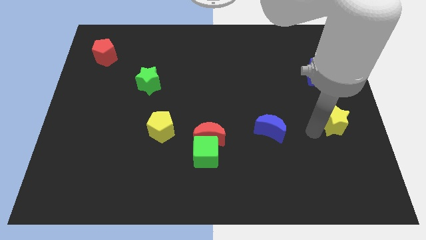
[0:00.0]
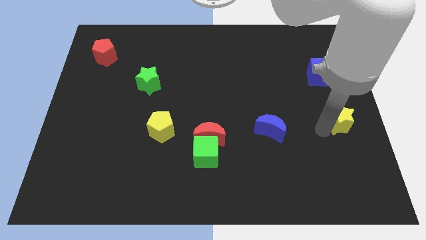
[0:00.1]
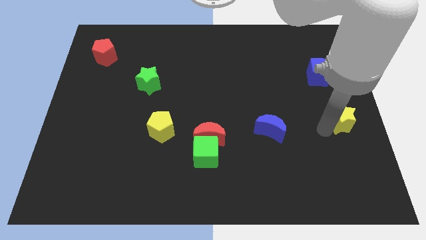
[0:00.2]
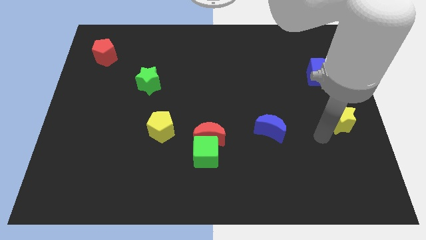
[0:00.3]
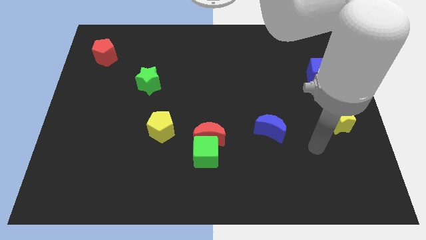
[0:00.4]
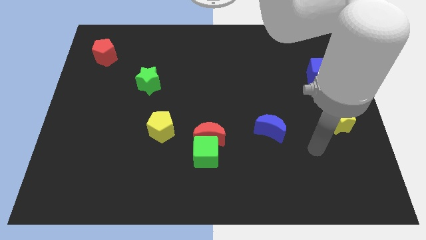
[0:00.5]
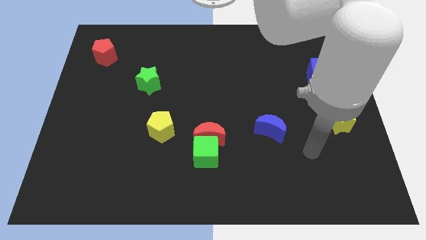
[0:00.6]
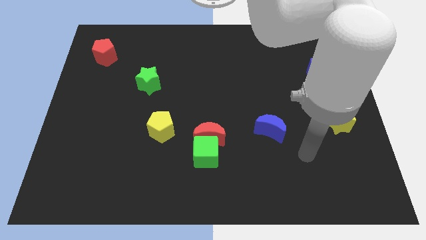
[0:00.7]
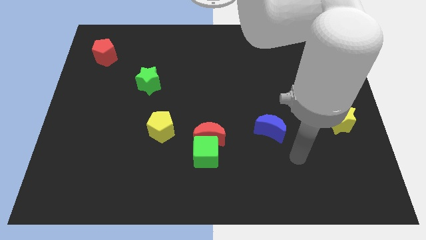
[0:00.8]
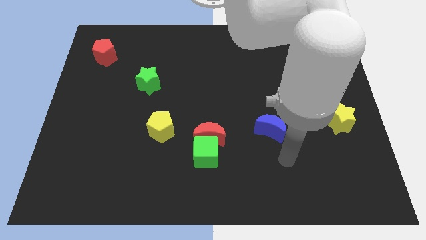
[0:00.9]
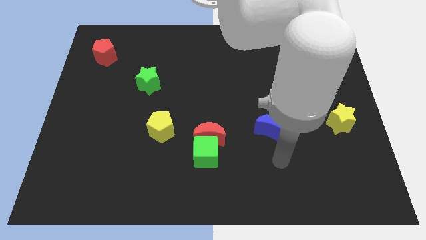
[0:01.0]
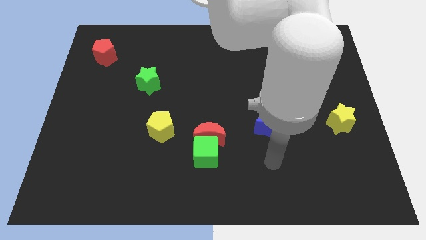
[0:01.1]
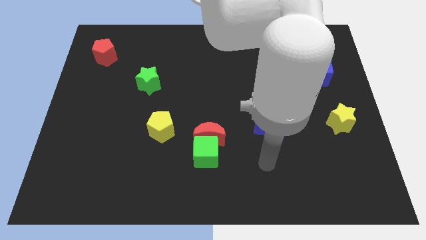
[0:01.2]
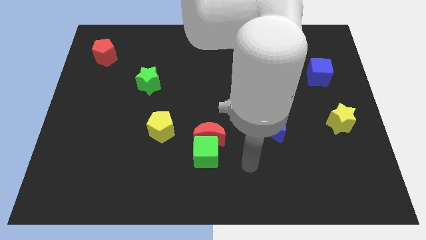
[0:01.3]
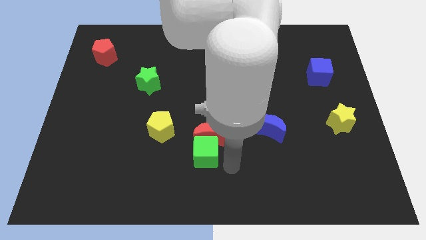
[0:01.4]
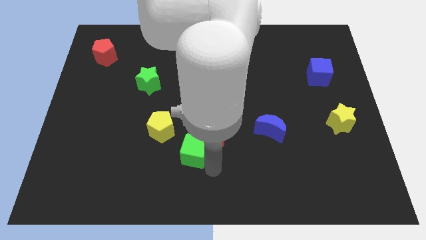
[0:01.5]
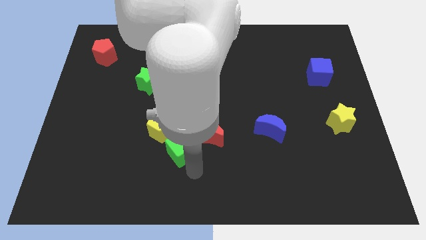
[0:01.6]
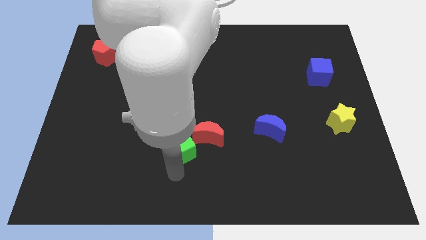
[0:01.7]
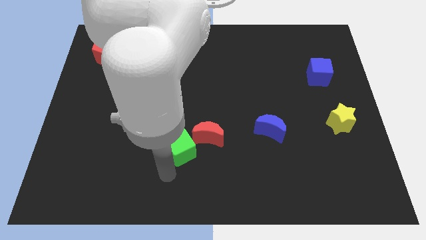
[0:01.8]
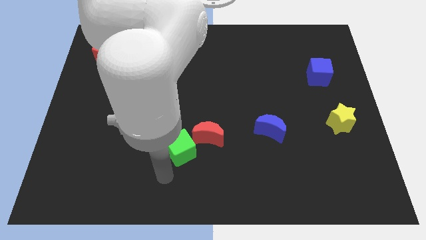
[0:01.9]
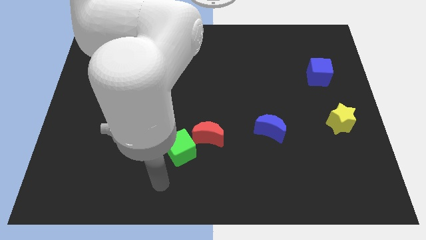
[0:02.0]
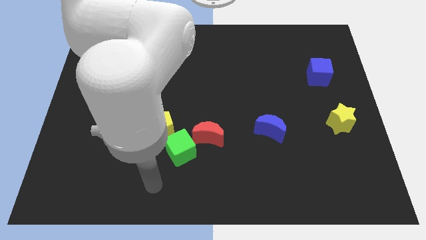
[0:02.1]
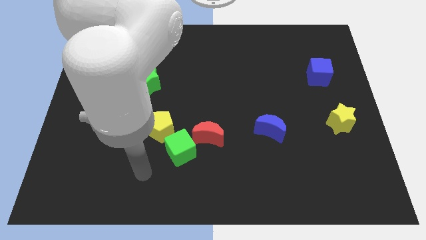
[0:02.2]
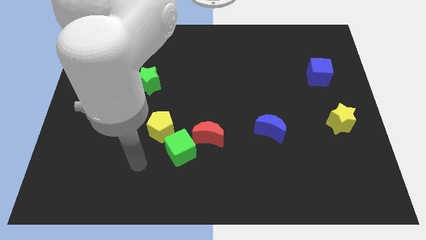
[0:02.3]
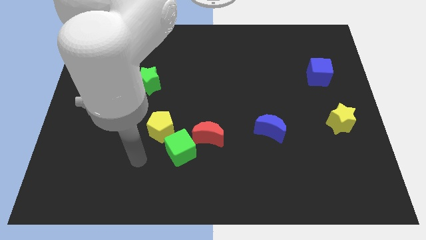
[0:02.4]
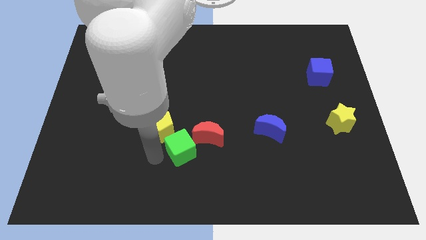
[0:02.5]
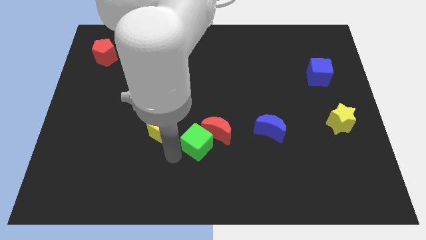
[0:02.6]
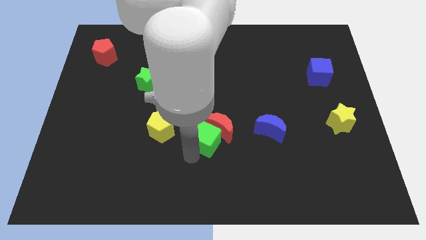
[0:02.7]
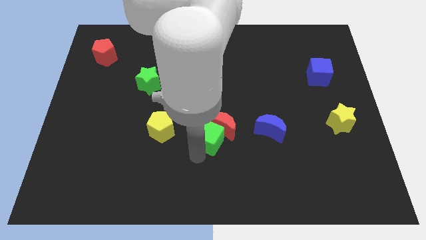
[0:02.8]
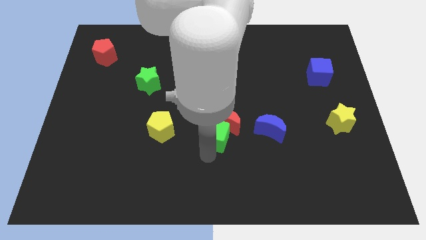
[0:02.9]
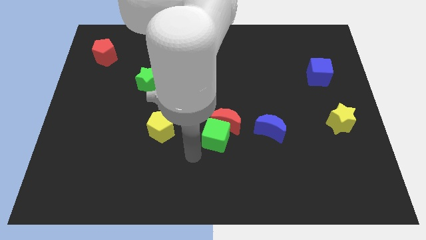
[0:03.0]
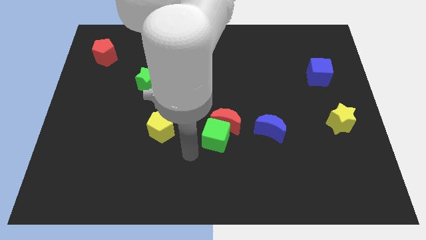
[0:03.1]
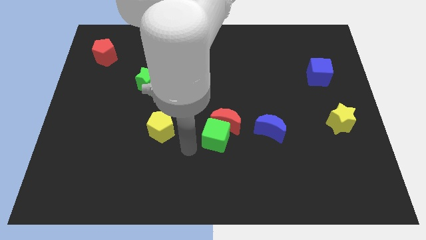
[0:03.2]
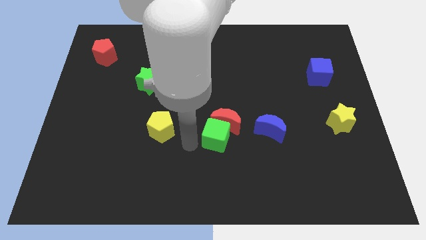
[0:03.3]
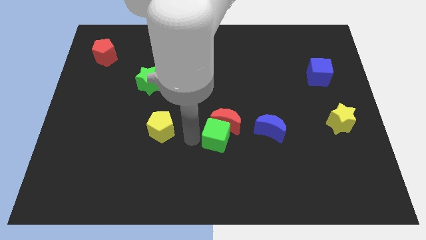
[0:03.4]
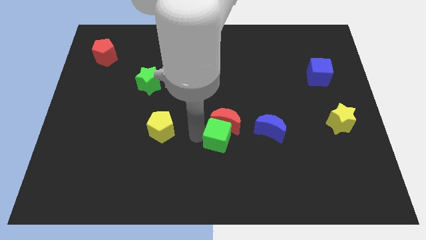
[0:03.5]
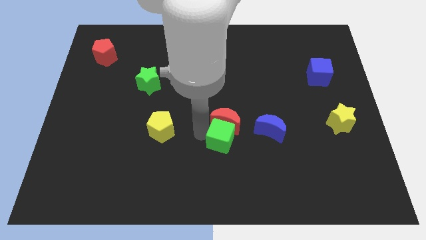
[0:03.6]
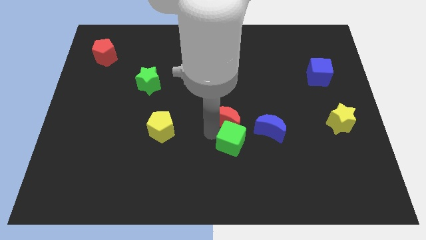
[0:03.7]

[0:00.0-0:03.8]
push the green cube and red crescent close to the left side of the blue moon

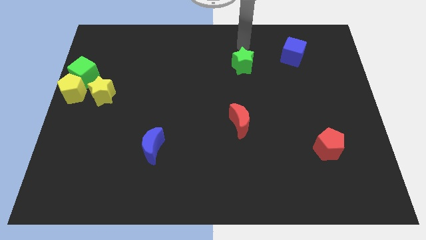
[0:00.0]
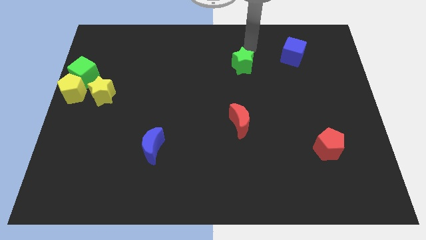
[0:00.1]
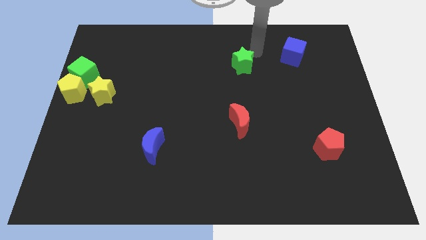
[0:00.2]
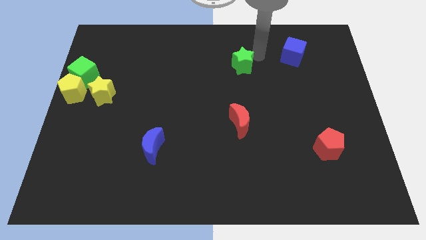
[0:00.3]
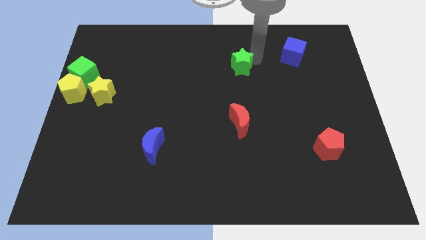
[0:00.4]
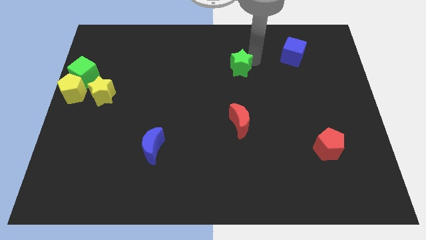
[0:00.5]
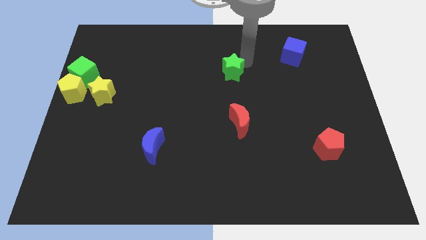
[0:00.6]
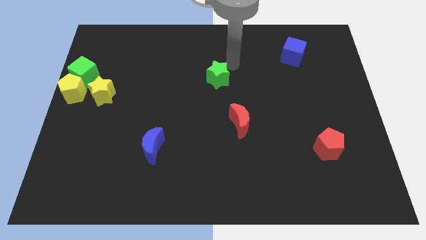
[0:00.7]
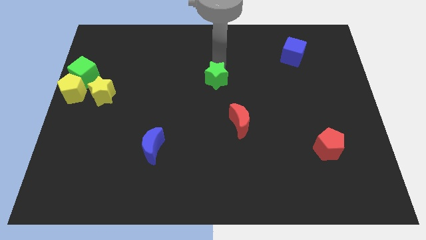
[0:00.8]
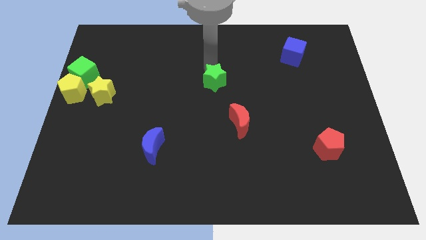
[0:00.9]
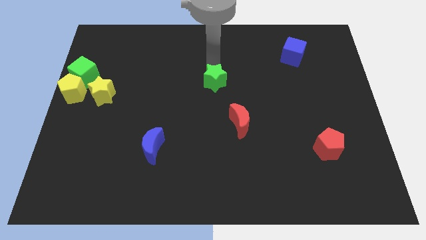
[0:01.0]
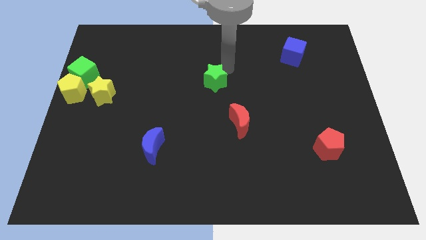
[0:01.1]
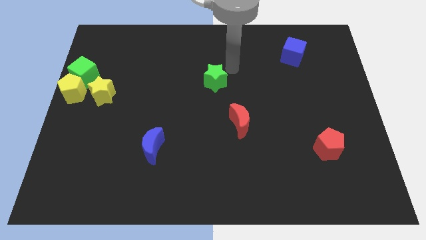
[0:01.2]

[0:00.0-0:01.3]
move the gren star slightly to the left

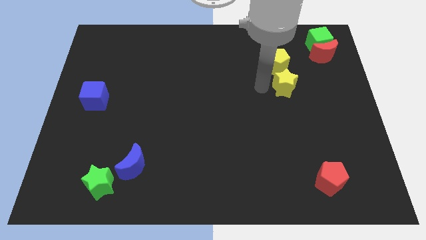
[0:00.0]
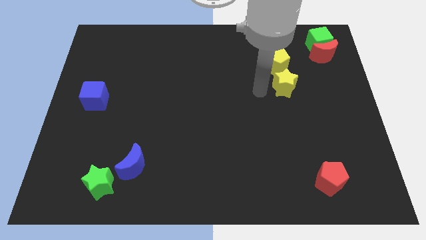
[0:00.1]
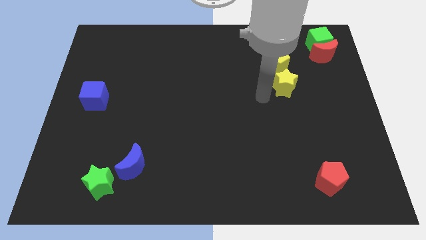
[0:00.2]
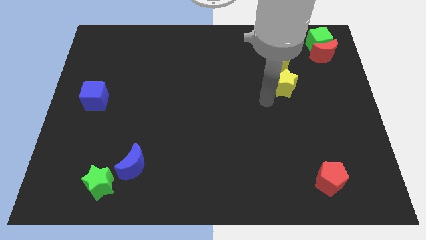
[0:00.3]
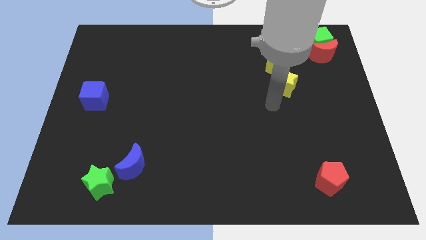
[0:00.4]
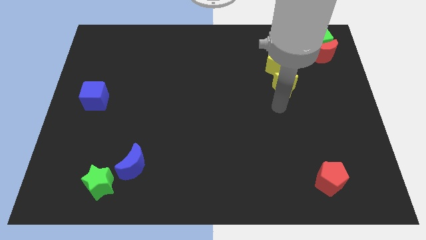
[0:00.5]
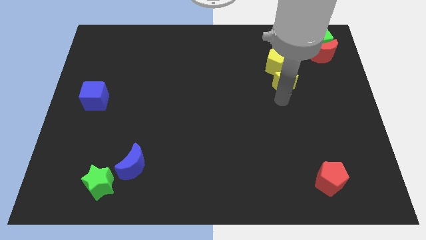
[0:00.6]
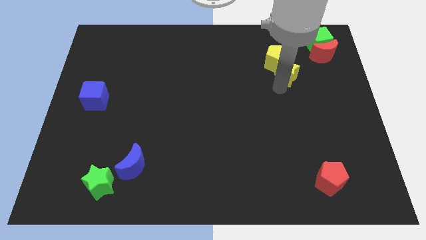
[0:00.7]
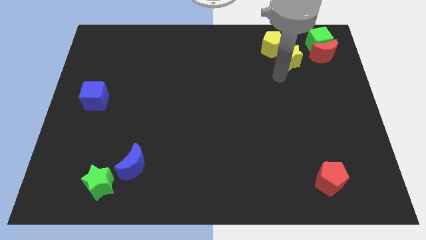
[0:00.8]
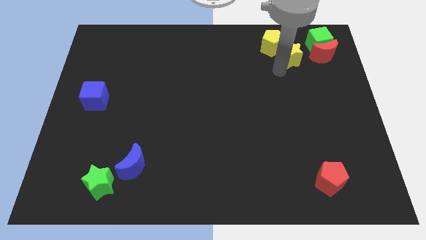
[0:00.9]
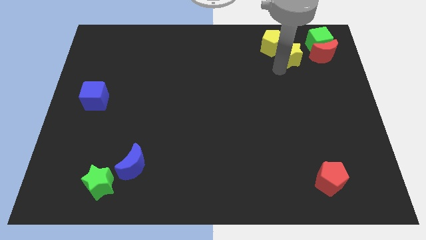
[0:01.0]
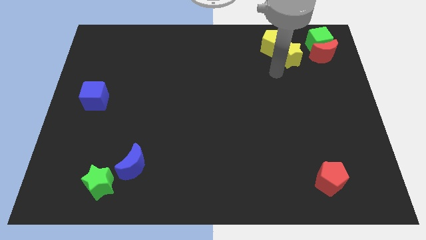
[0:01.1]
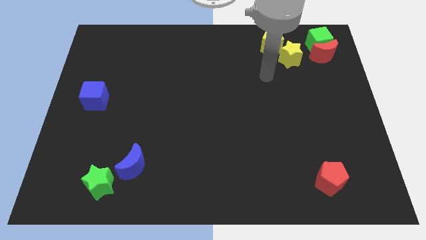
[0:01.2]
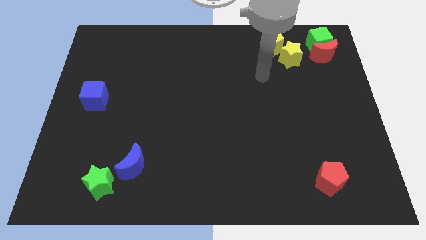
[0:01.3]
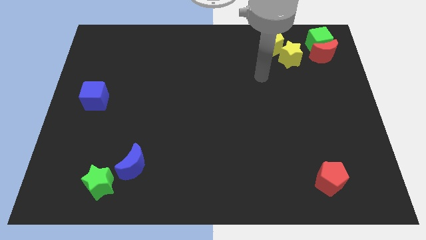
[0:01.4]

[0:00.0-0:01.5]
push yellow blocks to the top right of the board

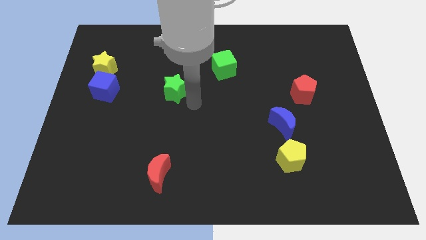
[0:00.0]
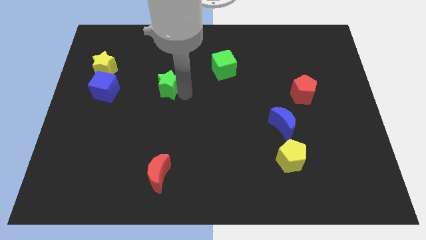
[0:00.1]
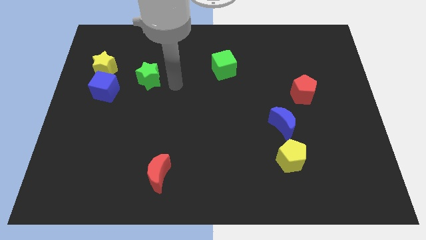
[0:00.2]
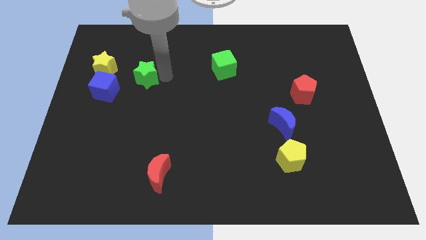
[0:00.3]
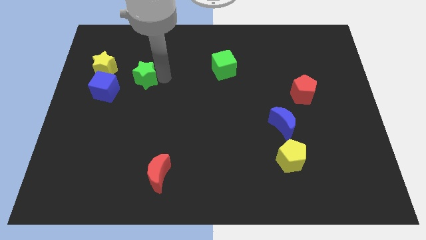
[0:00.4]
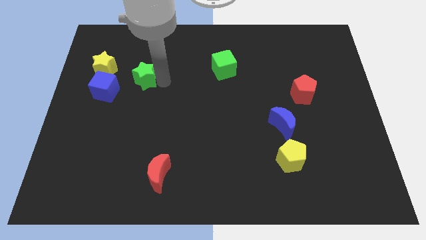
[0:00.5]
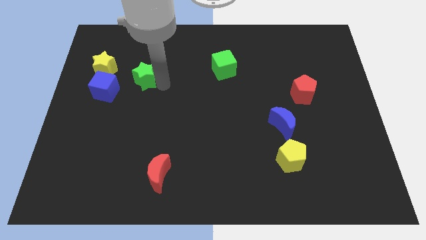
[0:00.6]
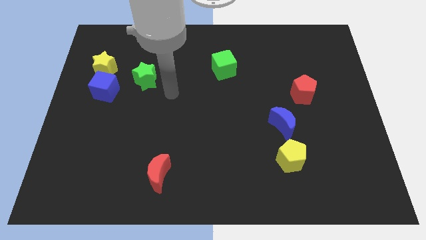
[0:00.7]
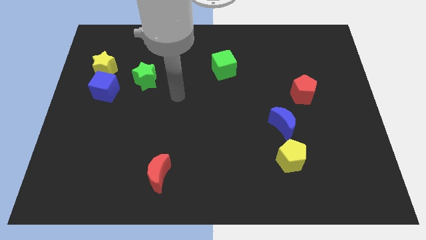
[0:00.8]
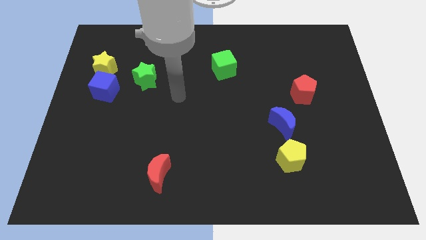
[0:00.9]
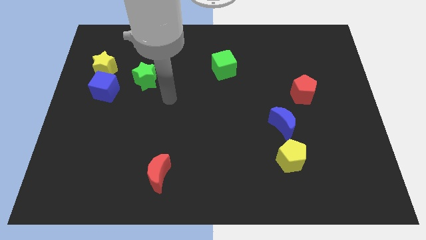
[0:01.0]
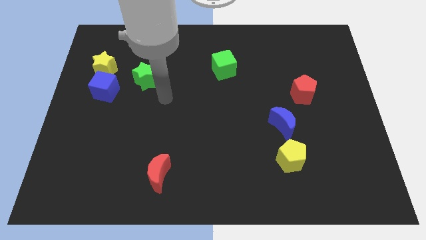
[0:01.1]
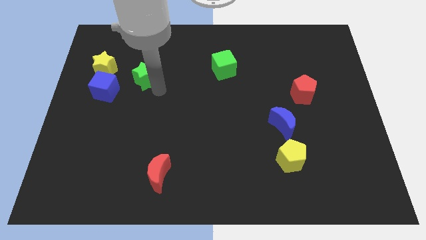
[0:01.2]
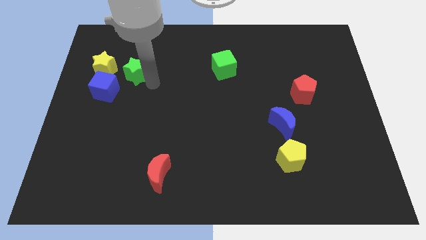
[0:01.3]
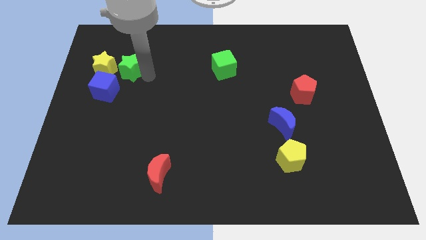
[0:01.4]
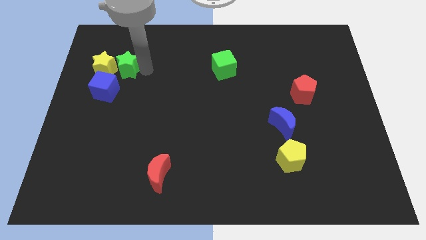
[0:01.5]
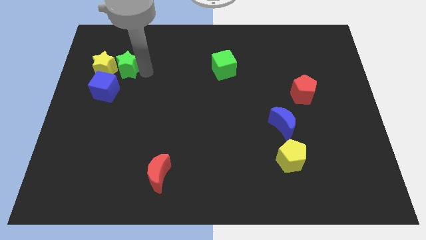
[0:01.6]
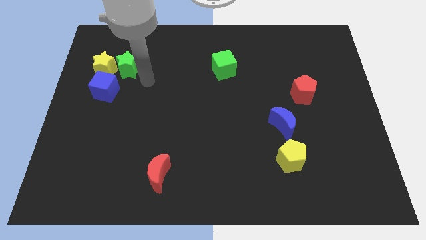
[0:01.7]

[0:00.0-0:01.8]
put the green star right to the yellow star

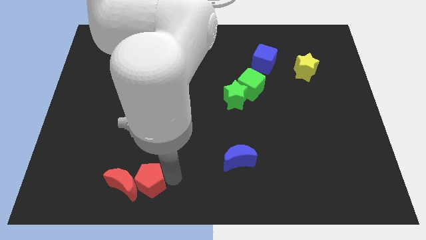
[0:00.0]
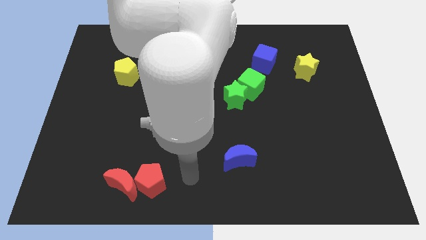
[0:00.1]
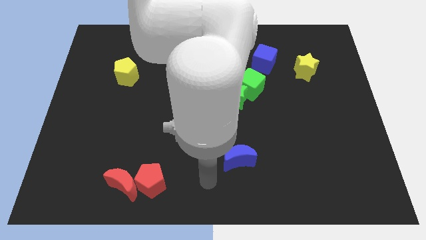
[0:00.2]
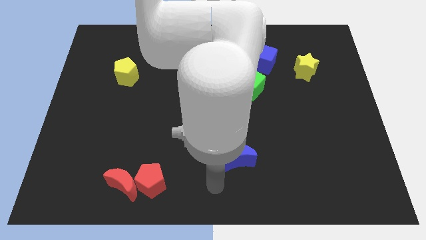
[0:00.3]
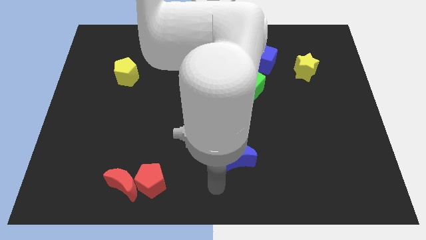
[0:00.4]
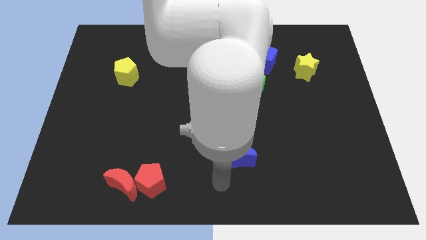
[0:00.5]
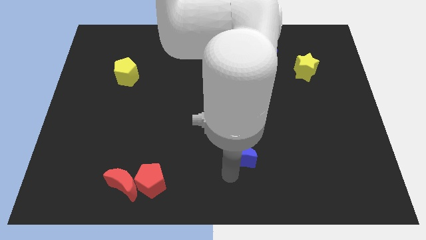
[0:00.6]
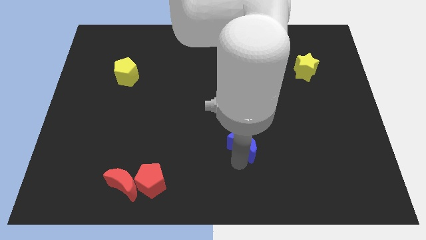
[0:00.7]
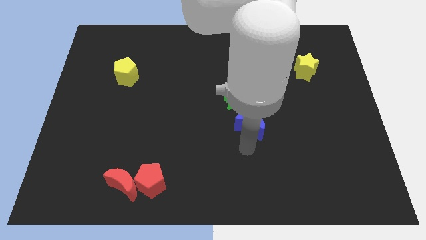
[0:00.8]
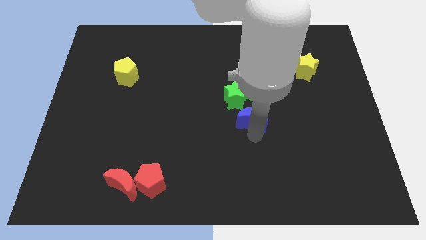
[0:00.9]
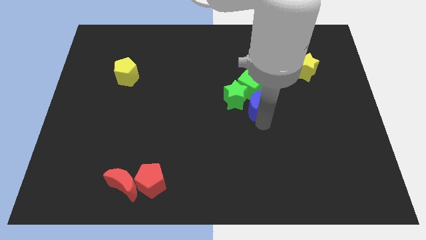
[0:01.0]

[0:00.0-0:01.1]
place the blue crescent at the bottom of the green cube
